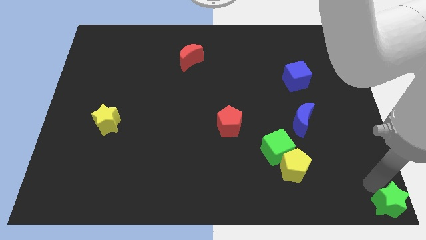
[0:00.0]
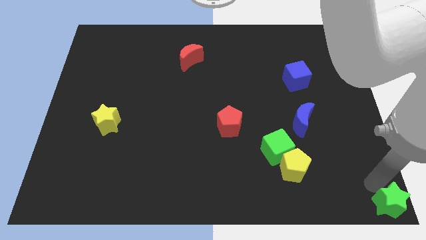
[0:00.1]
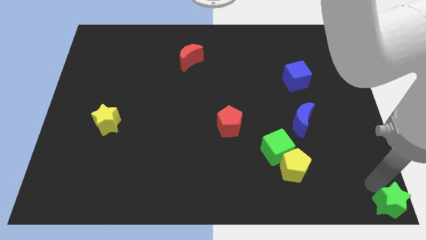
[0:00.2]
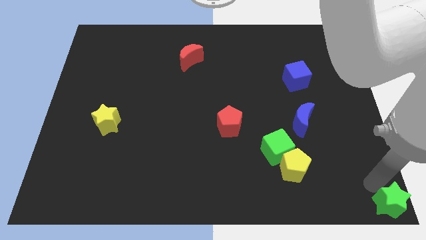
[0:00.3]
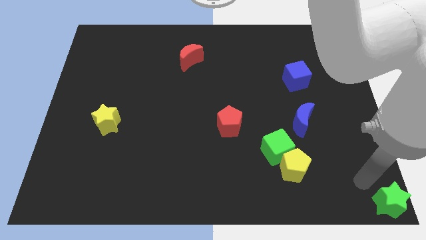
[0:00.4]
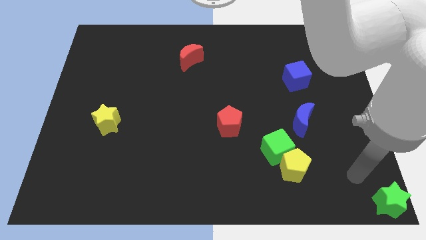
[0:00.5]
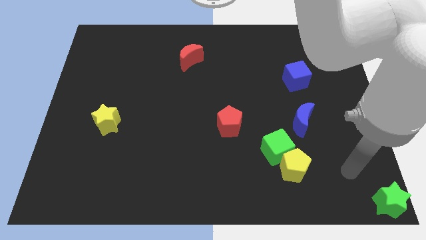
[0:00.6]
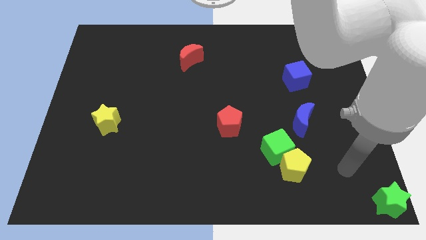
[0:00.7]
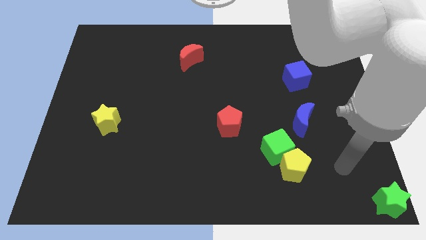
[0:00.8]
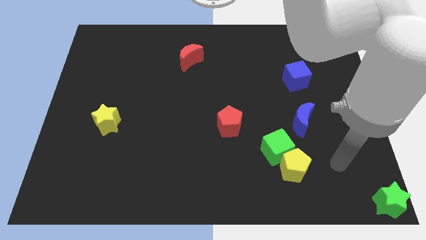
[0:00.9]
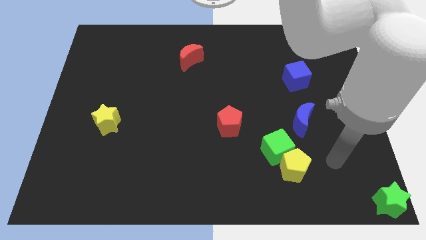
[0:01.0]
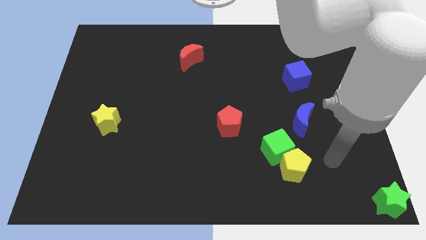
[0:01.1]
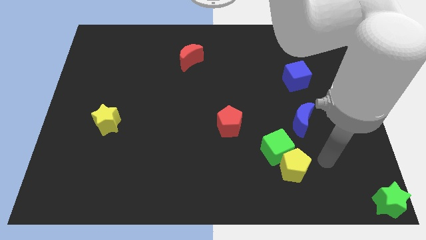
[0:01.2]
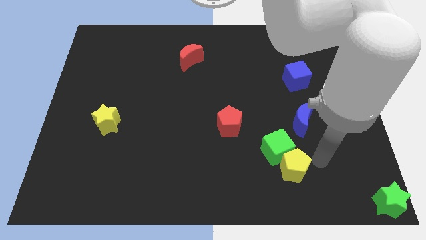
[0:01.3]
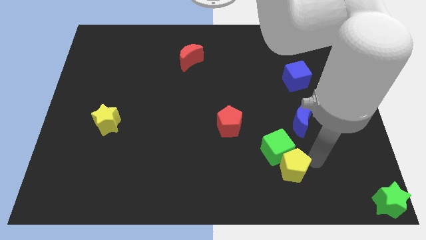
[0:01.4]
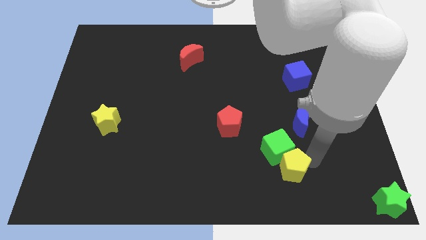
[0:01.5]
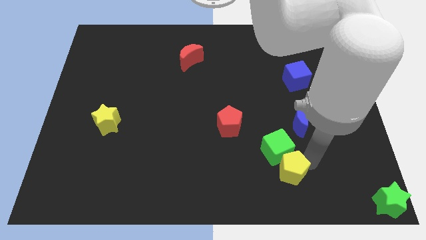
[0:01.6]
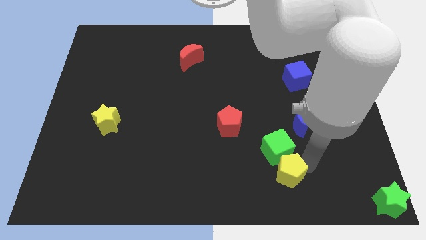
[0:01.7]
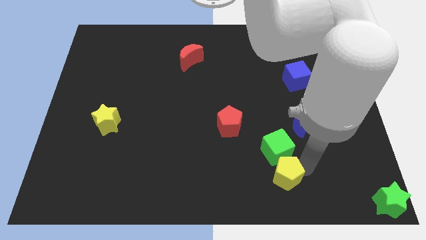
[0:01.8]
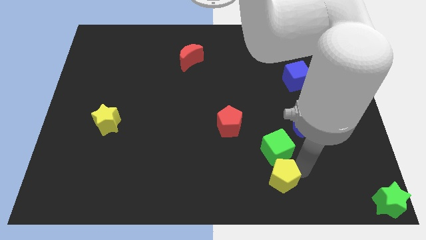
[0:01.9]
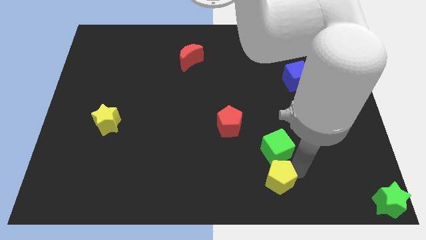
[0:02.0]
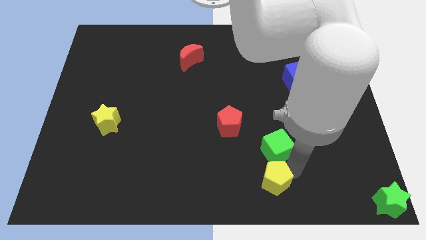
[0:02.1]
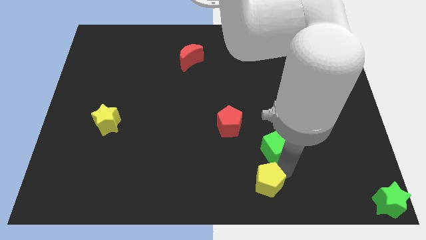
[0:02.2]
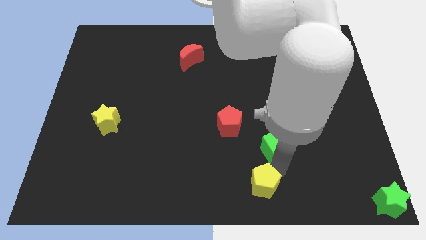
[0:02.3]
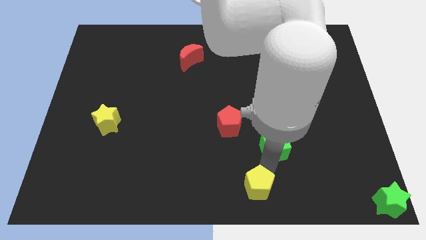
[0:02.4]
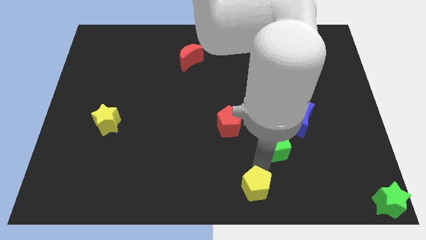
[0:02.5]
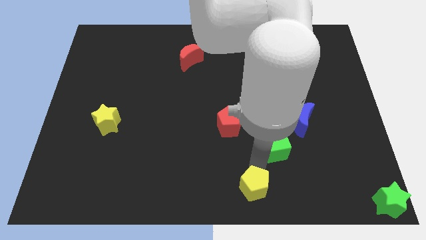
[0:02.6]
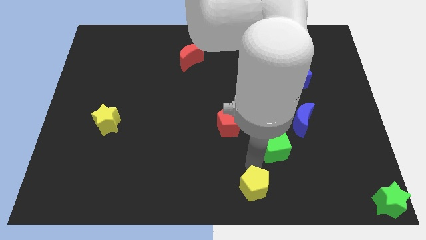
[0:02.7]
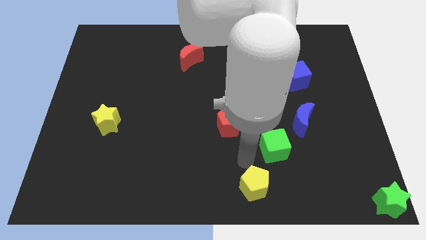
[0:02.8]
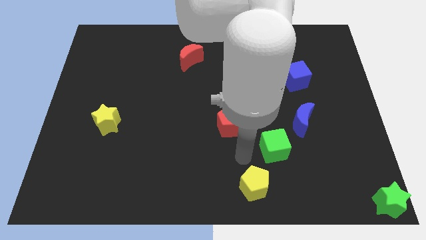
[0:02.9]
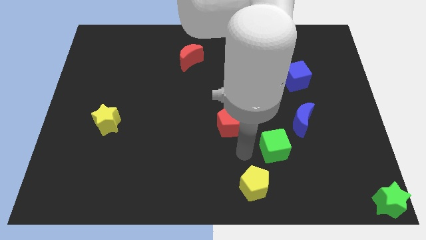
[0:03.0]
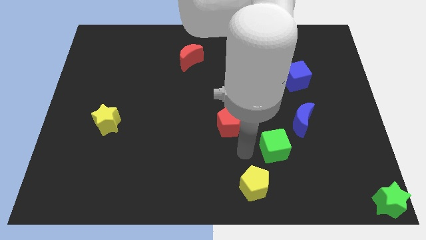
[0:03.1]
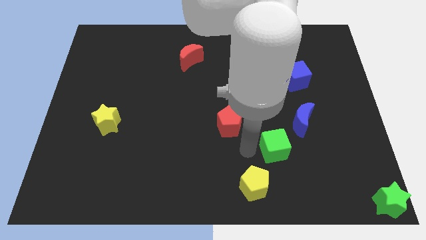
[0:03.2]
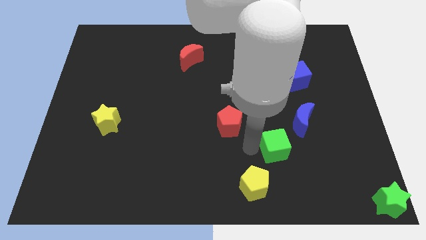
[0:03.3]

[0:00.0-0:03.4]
move the yellow pentagon diagonally to the left of the green cube

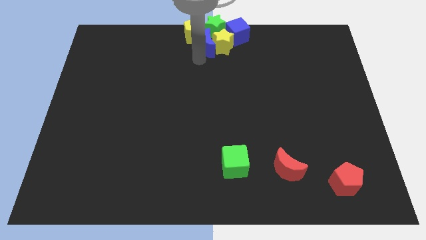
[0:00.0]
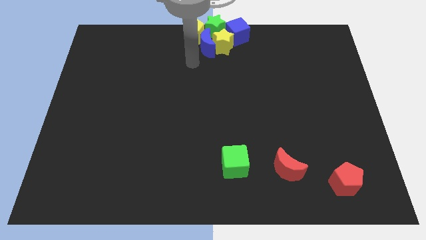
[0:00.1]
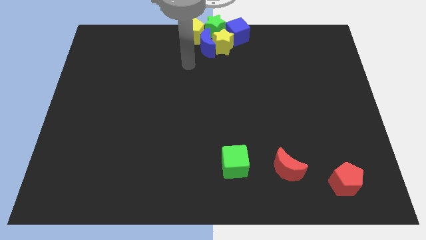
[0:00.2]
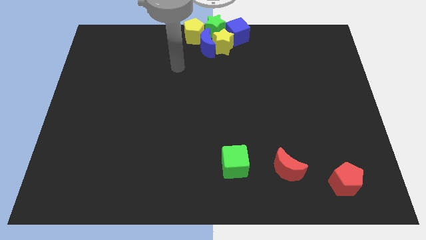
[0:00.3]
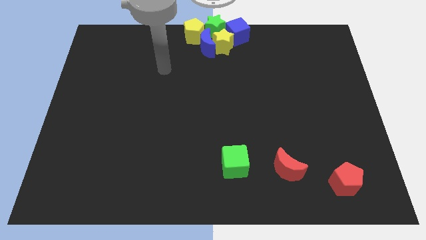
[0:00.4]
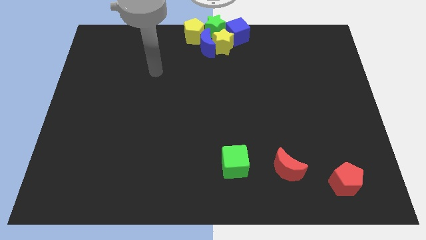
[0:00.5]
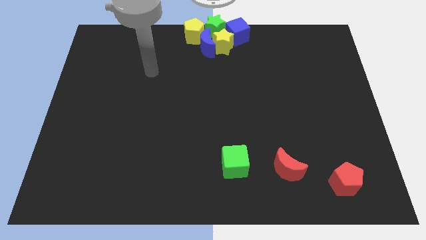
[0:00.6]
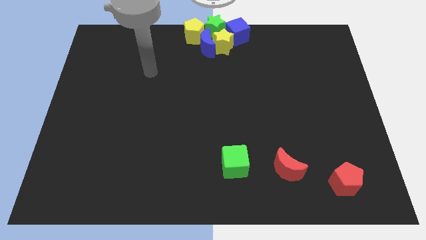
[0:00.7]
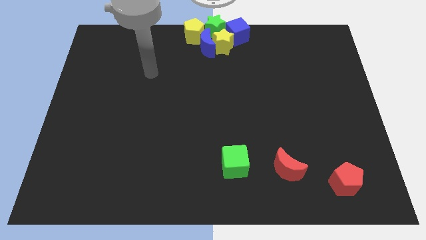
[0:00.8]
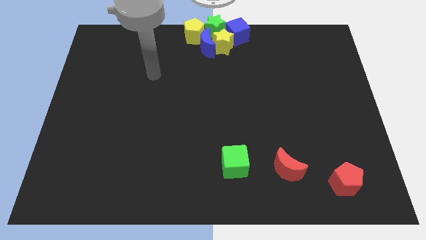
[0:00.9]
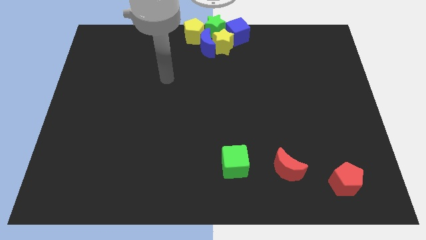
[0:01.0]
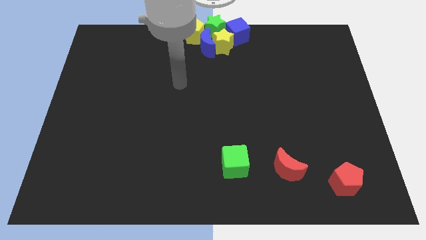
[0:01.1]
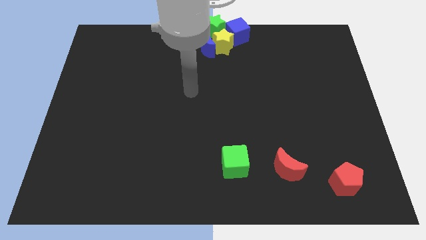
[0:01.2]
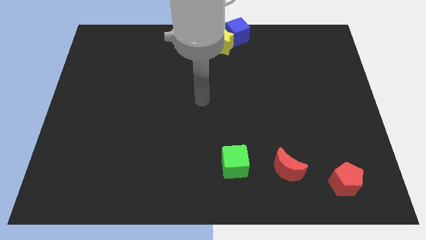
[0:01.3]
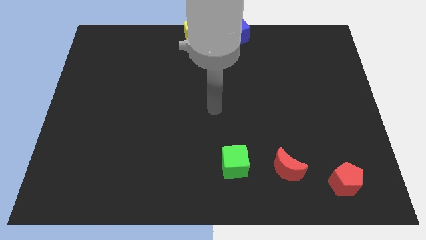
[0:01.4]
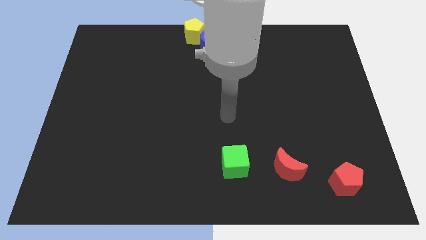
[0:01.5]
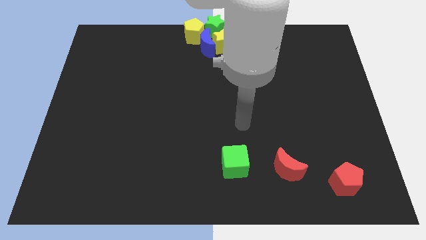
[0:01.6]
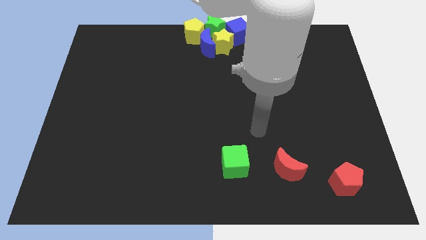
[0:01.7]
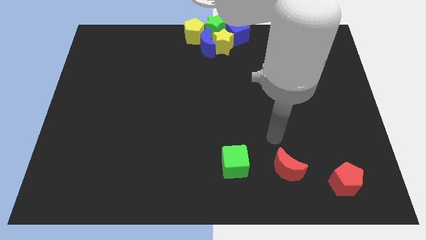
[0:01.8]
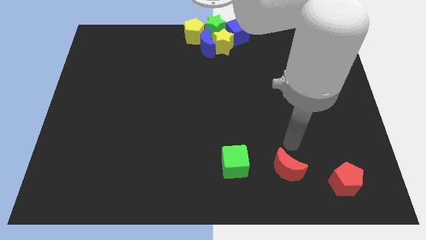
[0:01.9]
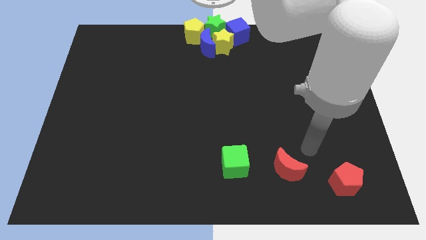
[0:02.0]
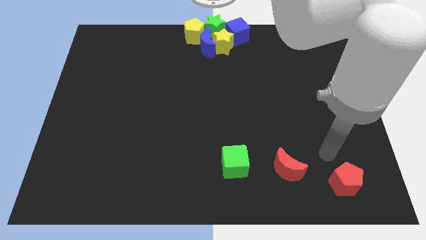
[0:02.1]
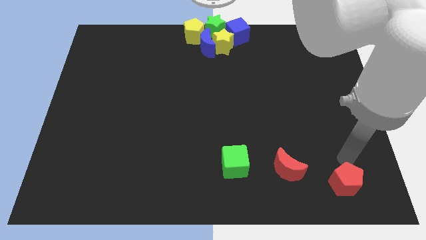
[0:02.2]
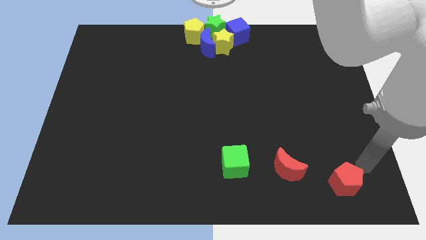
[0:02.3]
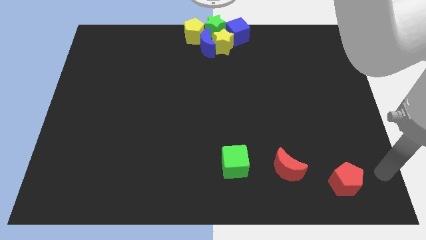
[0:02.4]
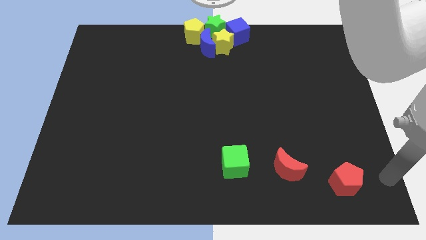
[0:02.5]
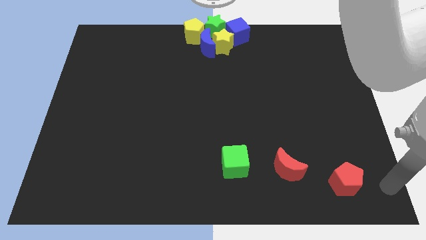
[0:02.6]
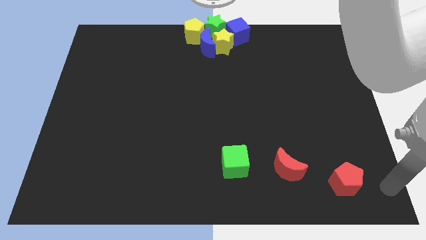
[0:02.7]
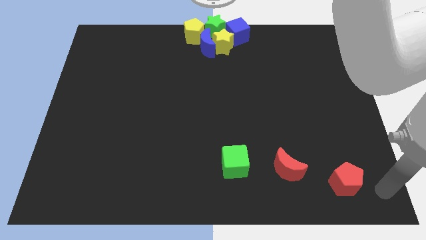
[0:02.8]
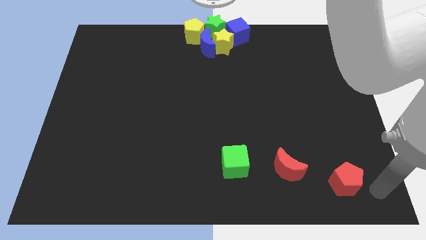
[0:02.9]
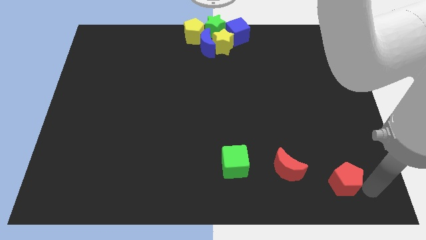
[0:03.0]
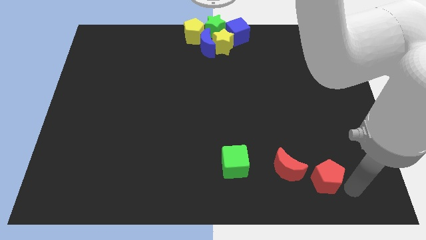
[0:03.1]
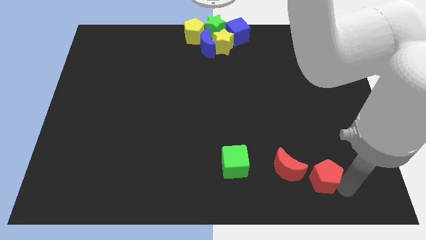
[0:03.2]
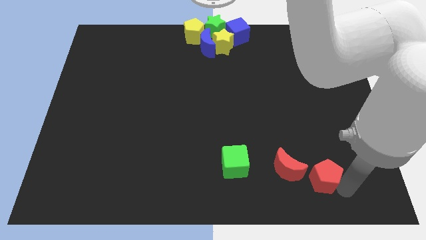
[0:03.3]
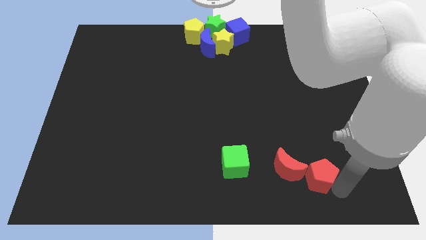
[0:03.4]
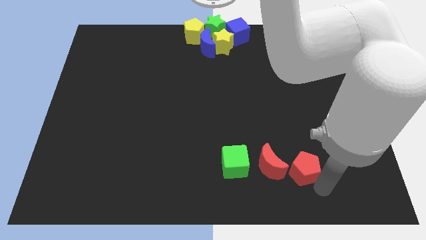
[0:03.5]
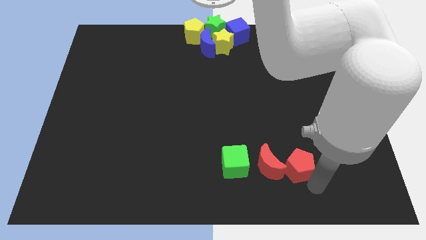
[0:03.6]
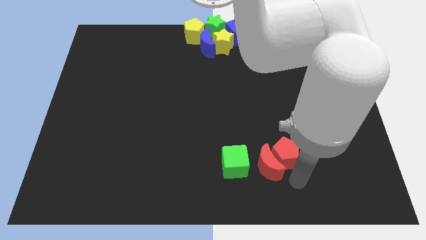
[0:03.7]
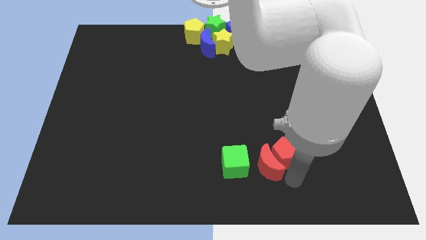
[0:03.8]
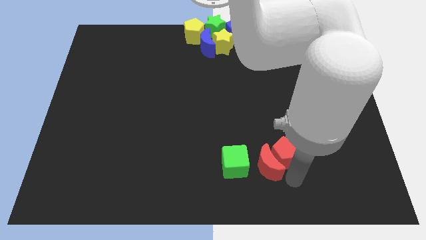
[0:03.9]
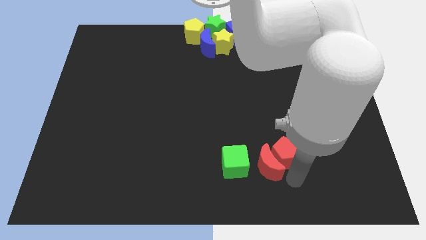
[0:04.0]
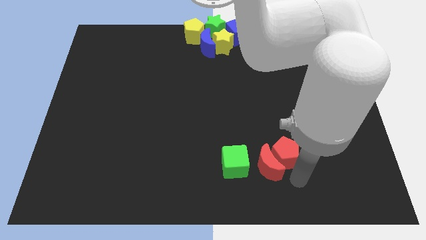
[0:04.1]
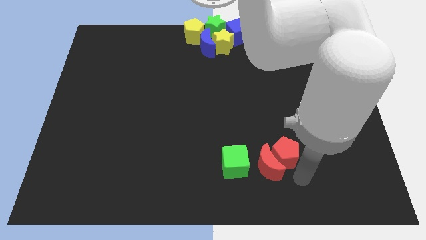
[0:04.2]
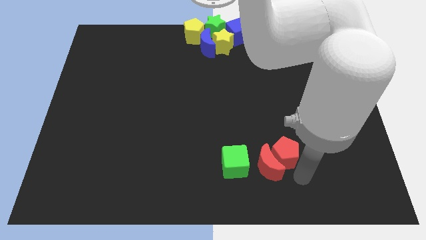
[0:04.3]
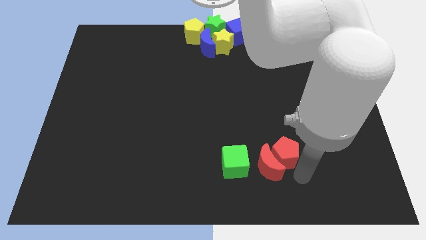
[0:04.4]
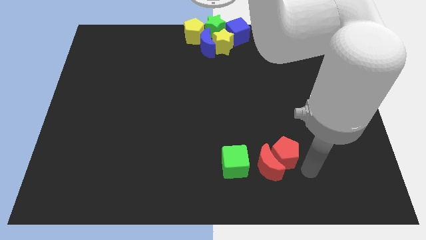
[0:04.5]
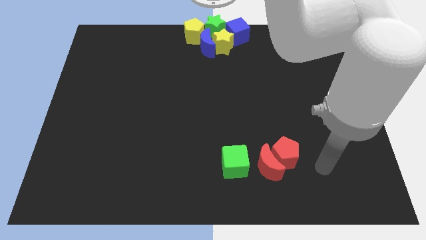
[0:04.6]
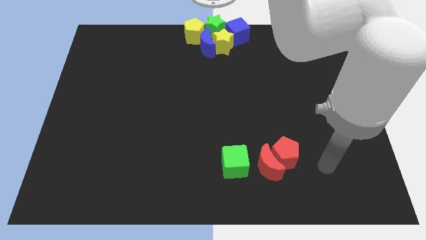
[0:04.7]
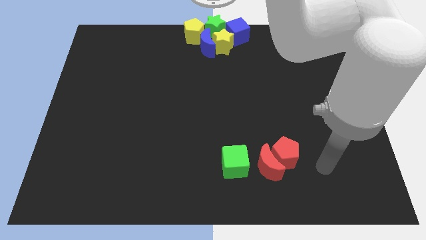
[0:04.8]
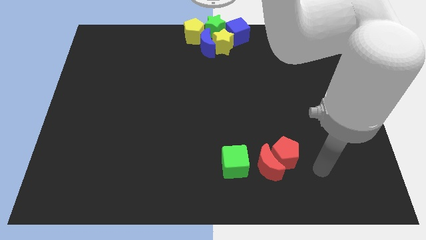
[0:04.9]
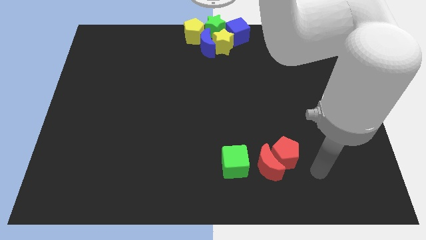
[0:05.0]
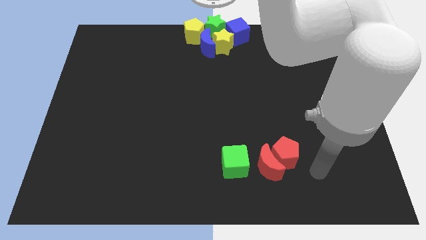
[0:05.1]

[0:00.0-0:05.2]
push the red pentagon into the red crescent

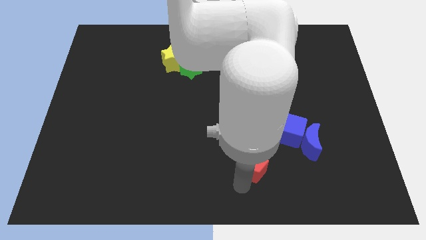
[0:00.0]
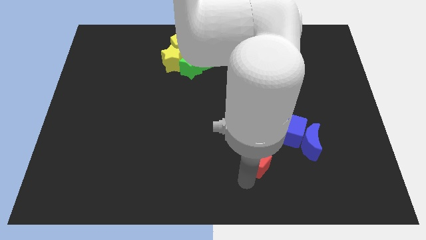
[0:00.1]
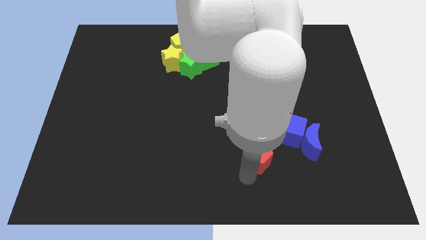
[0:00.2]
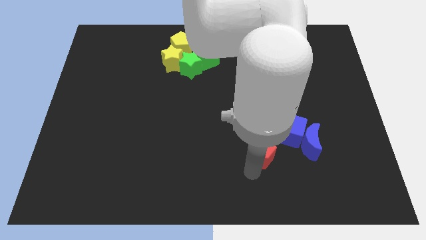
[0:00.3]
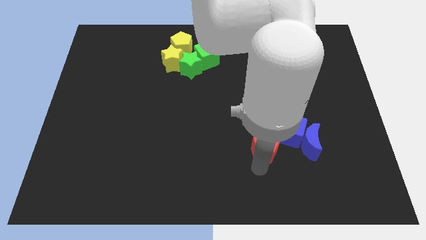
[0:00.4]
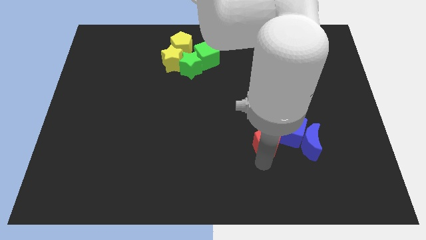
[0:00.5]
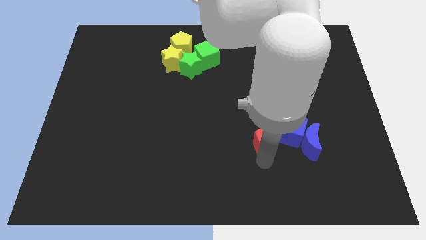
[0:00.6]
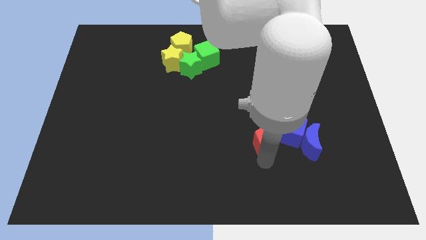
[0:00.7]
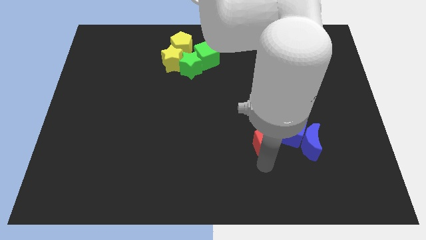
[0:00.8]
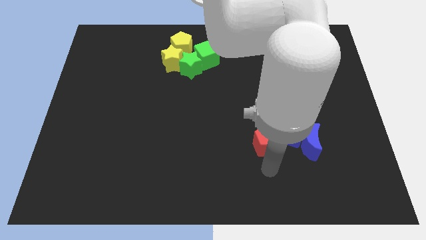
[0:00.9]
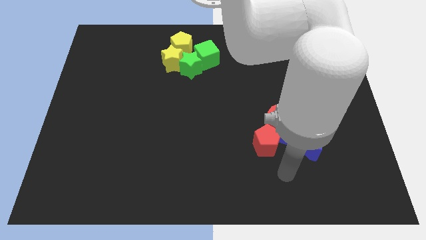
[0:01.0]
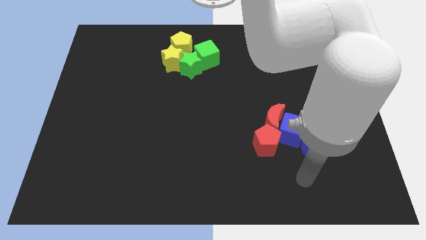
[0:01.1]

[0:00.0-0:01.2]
move the red pentagon to bottom side of the red crescent
